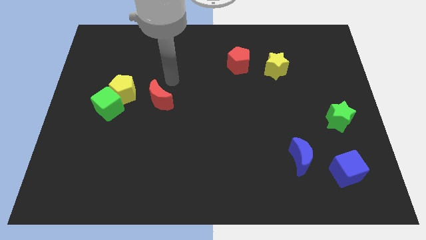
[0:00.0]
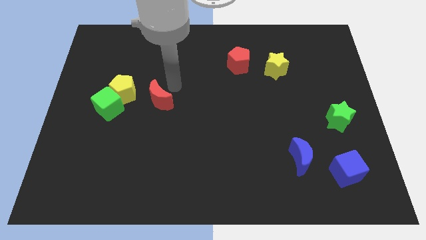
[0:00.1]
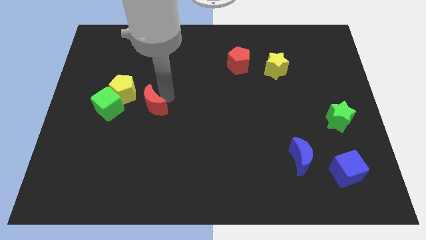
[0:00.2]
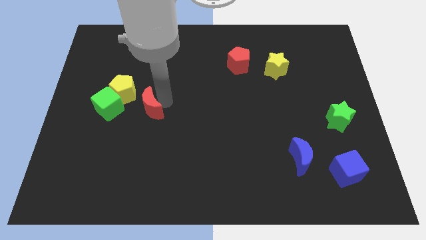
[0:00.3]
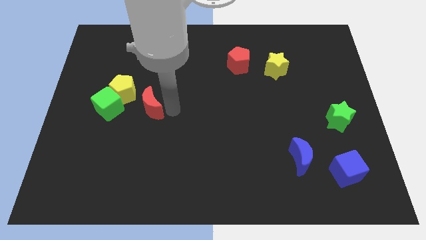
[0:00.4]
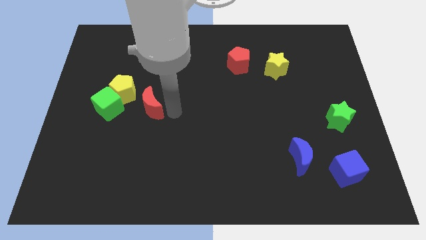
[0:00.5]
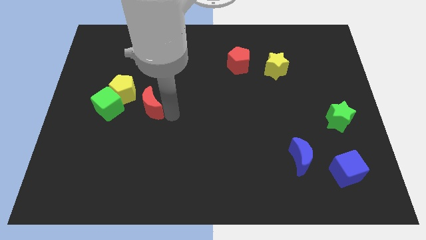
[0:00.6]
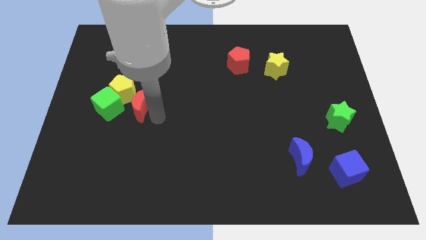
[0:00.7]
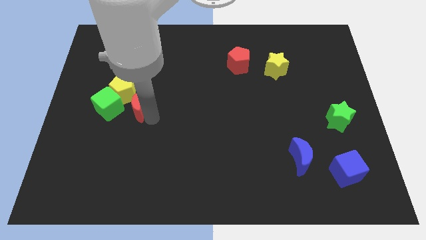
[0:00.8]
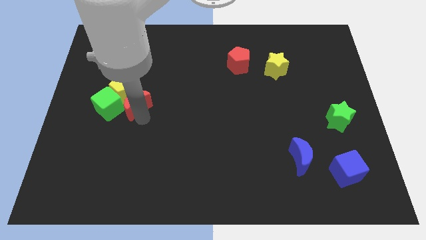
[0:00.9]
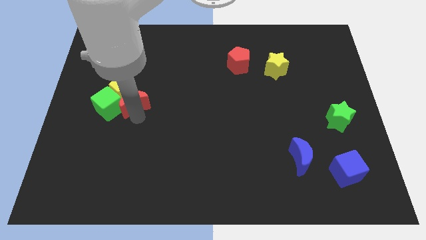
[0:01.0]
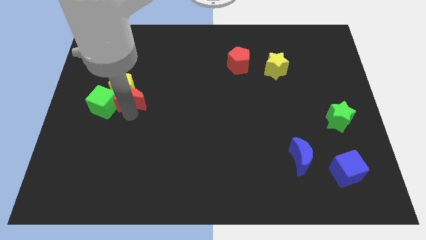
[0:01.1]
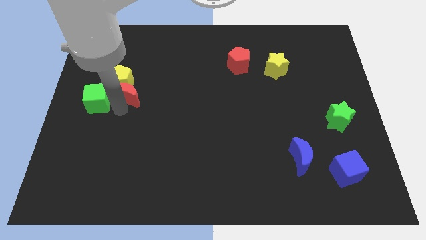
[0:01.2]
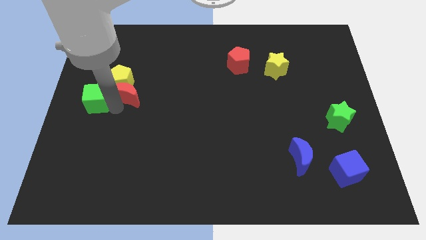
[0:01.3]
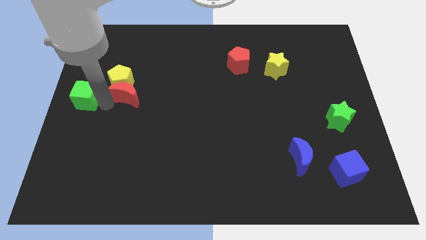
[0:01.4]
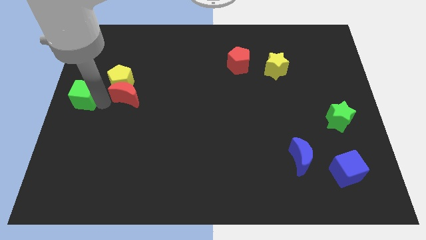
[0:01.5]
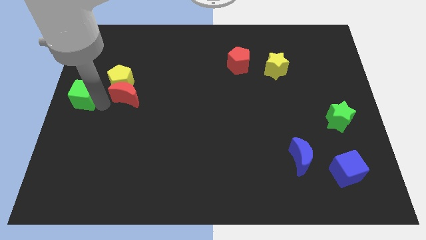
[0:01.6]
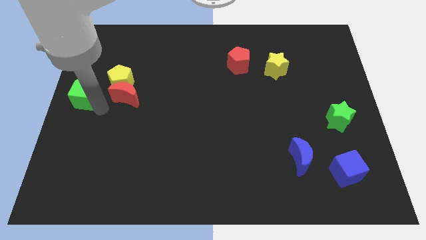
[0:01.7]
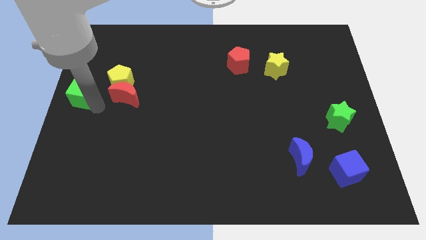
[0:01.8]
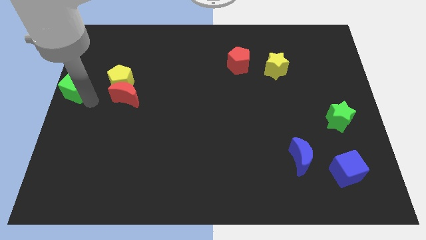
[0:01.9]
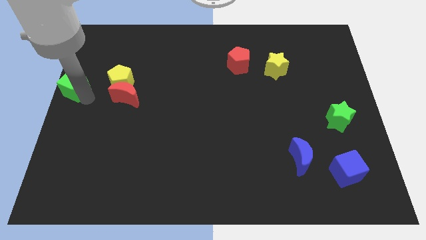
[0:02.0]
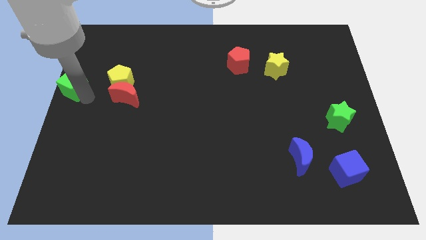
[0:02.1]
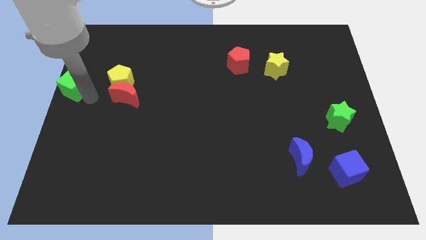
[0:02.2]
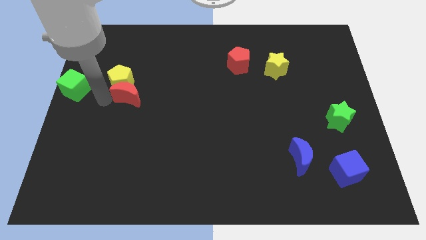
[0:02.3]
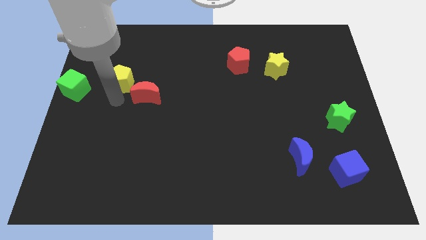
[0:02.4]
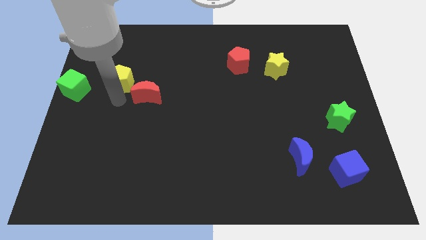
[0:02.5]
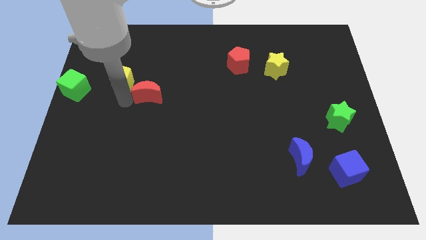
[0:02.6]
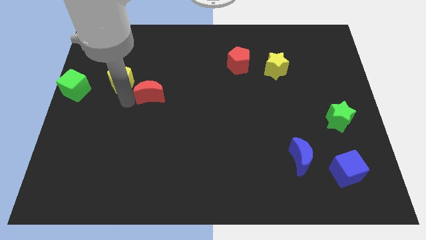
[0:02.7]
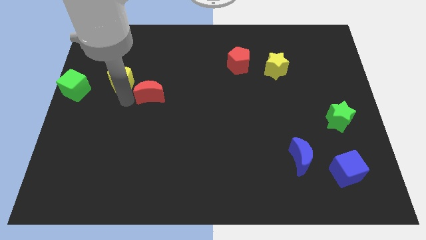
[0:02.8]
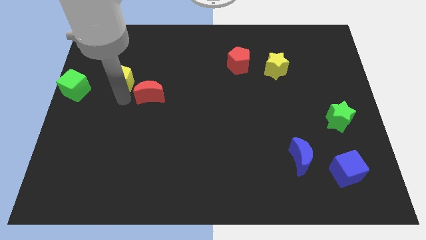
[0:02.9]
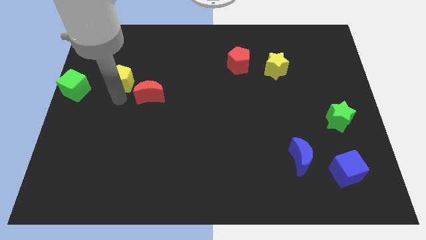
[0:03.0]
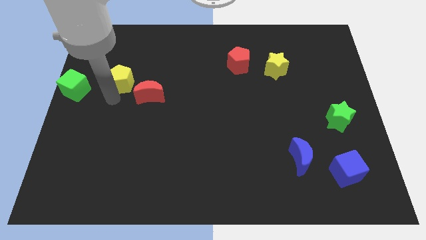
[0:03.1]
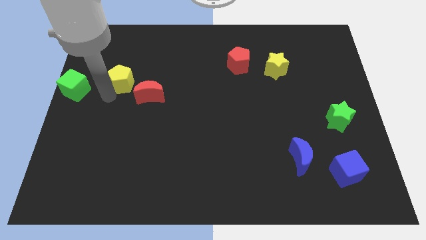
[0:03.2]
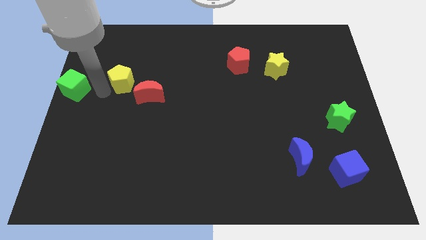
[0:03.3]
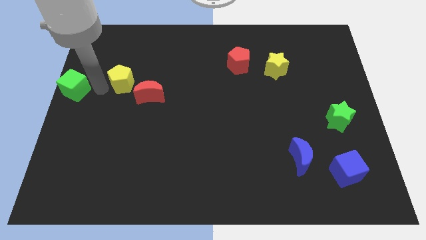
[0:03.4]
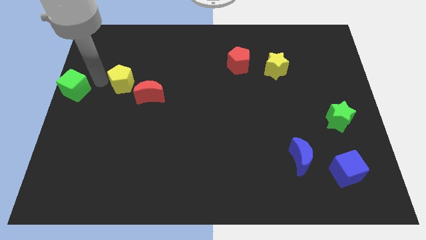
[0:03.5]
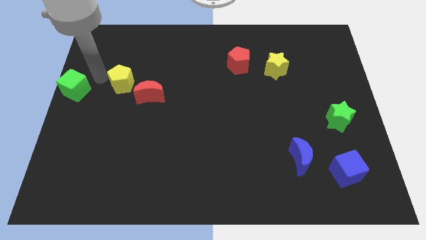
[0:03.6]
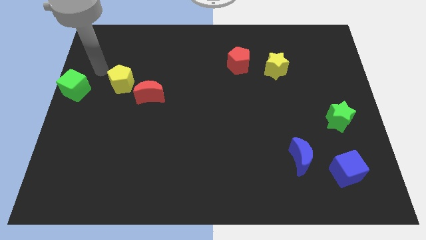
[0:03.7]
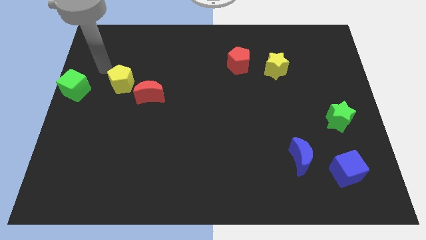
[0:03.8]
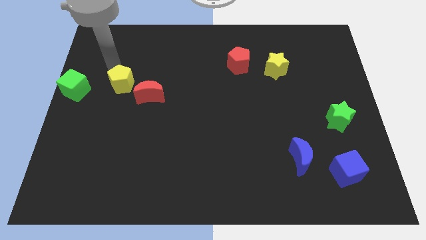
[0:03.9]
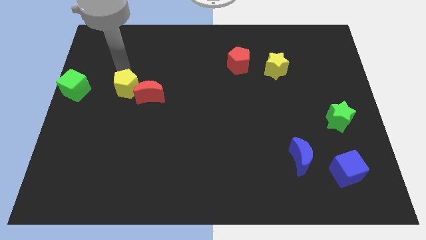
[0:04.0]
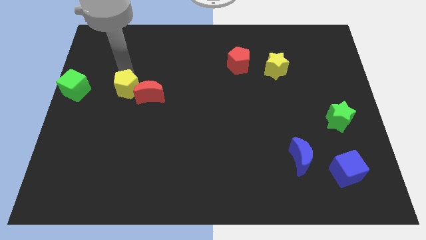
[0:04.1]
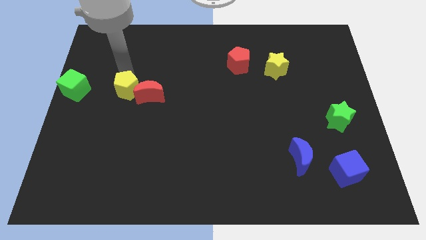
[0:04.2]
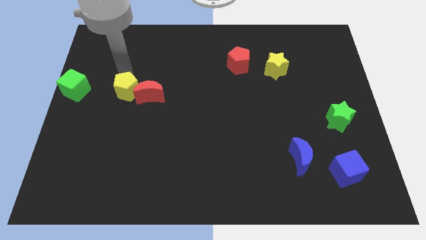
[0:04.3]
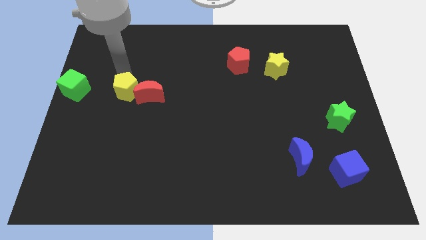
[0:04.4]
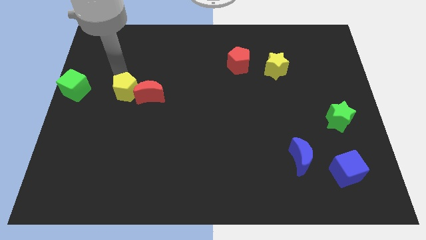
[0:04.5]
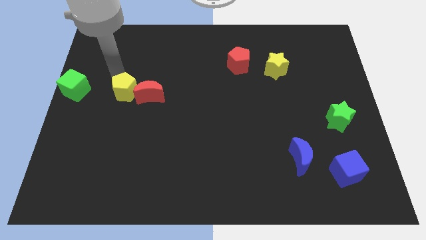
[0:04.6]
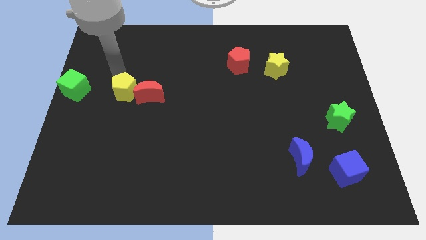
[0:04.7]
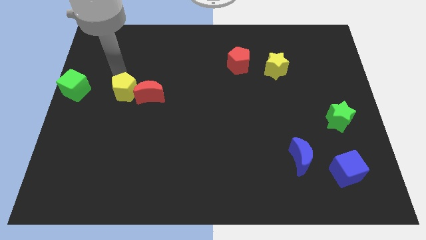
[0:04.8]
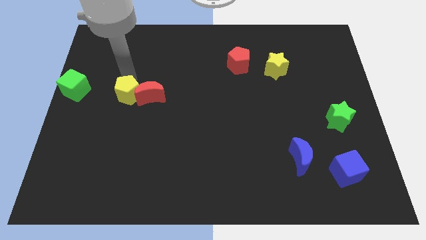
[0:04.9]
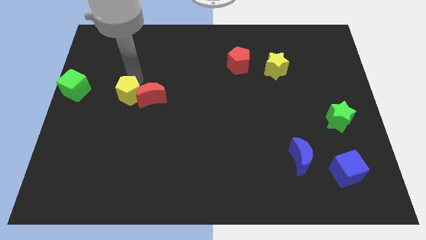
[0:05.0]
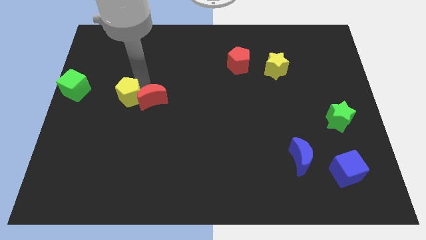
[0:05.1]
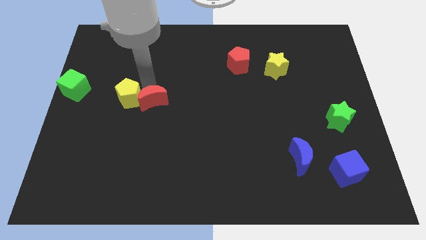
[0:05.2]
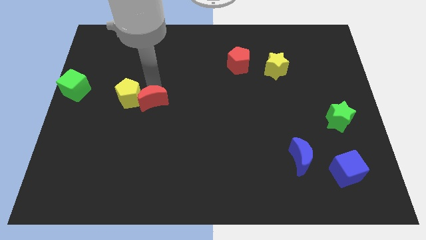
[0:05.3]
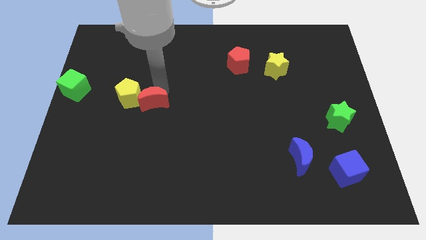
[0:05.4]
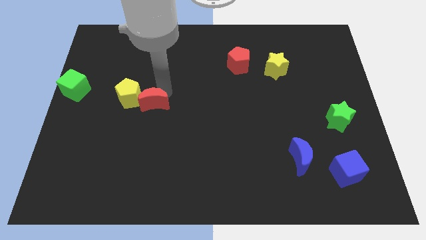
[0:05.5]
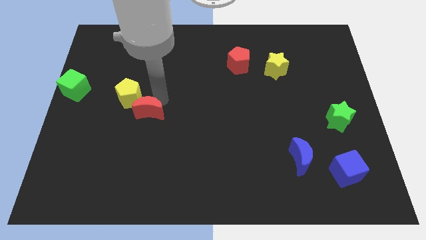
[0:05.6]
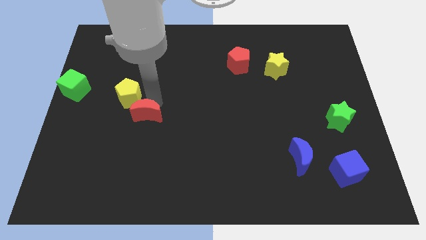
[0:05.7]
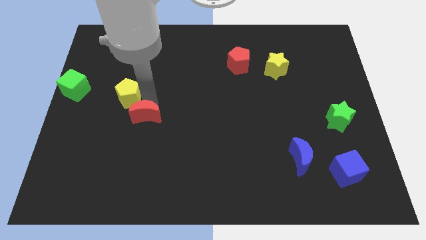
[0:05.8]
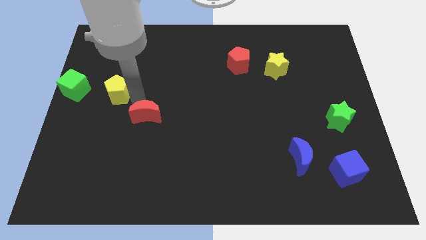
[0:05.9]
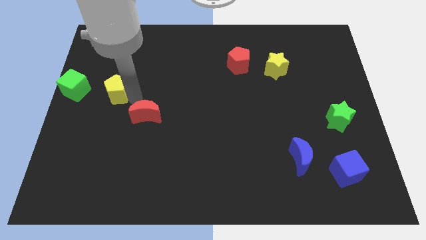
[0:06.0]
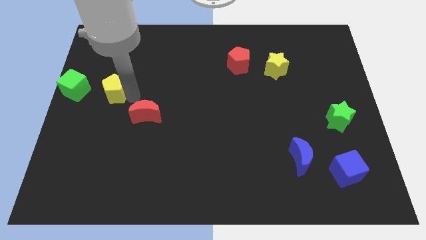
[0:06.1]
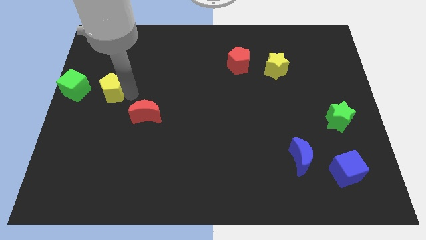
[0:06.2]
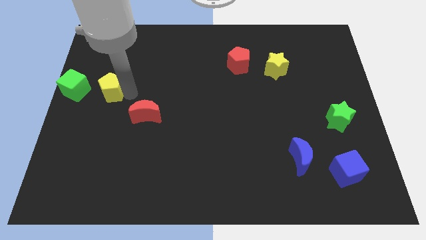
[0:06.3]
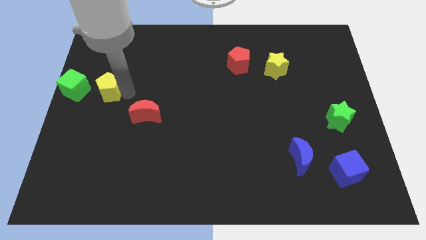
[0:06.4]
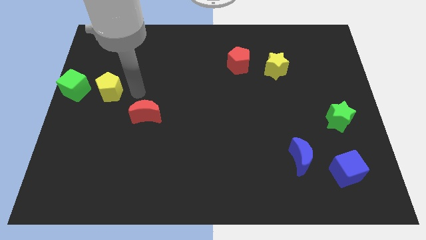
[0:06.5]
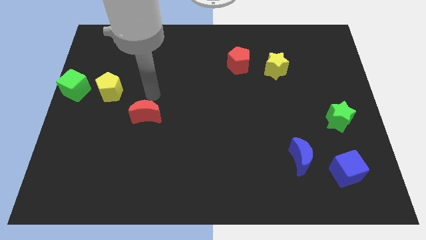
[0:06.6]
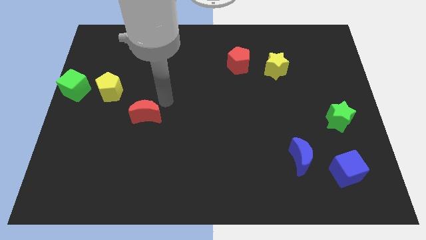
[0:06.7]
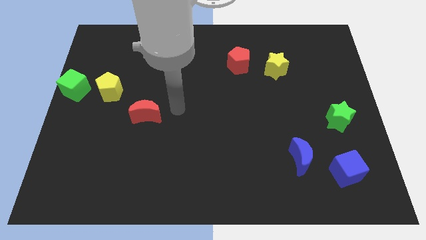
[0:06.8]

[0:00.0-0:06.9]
place the green cube and yellow pentagon in a horizontal line at the left side of the board

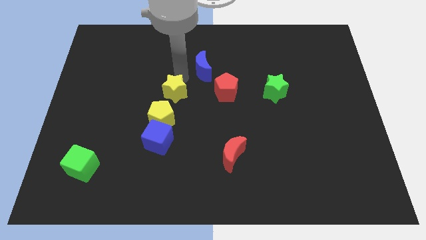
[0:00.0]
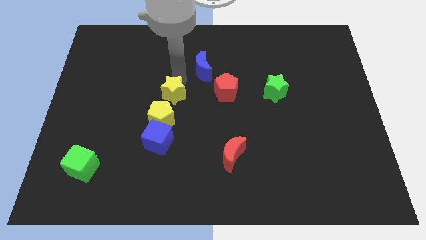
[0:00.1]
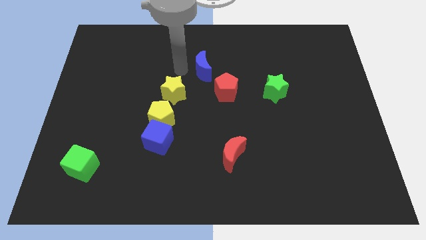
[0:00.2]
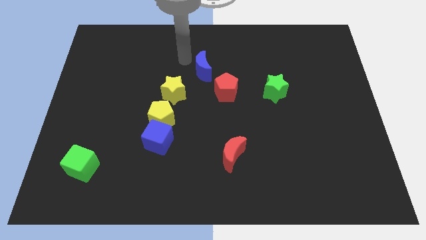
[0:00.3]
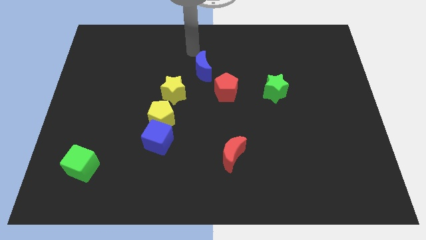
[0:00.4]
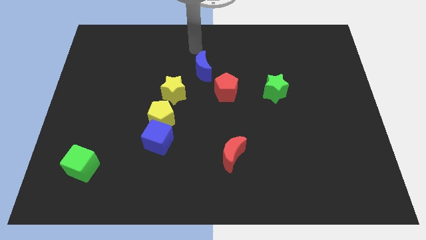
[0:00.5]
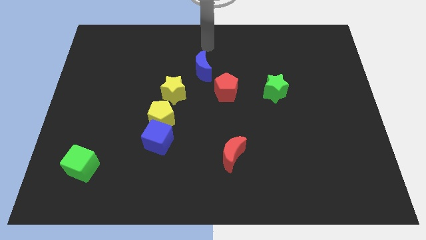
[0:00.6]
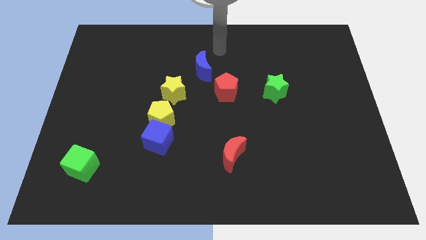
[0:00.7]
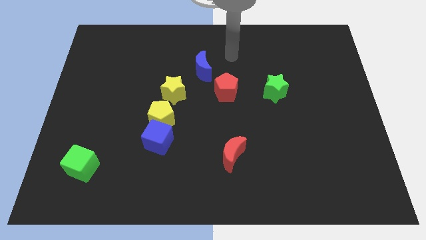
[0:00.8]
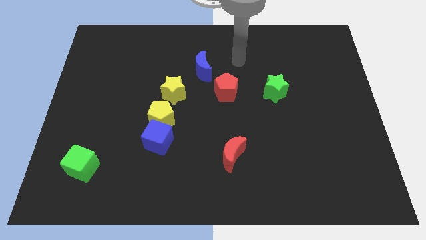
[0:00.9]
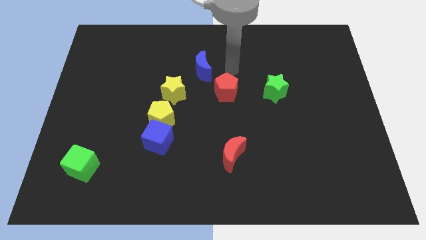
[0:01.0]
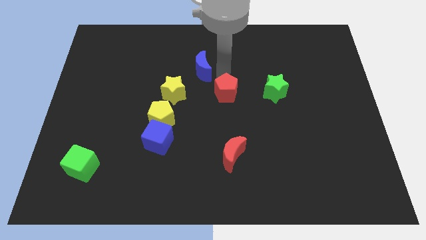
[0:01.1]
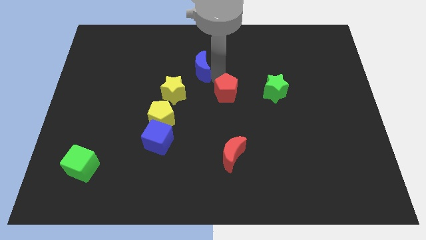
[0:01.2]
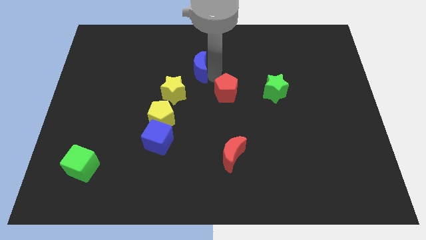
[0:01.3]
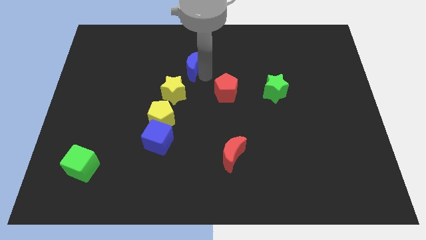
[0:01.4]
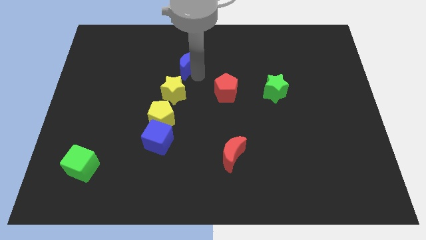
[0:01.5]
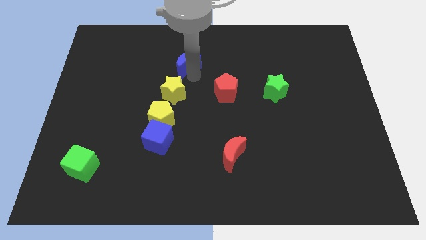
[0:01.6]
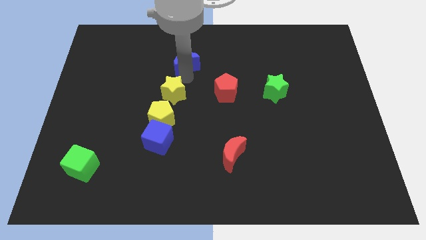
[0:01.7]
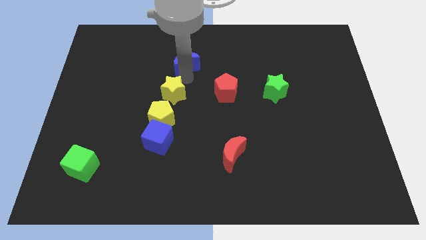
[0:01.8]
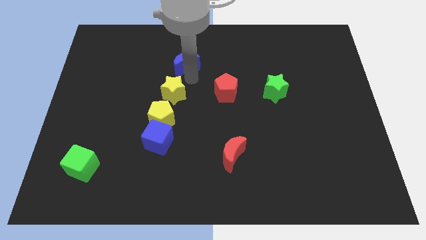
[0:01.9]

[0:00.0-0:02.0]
place the blue moon on top of the yellow star

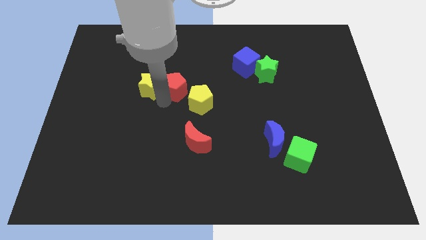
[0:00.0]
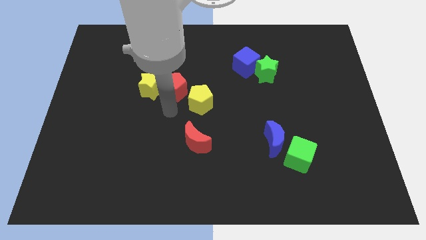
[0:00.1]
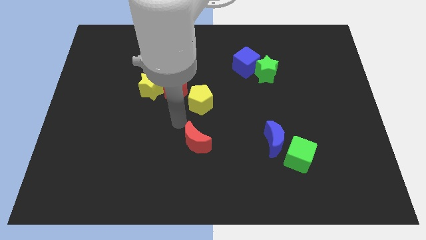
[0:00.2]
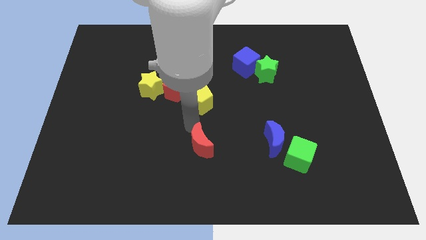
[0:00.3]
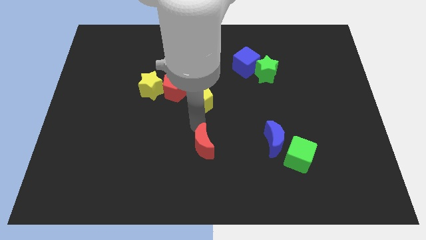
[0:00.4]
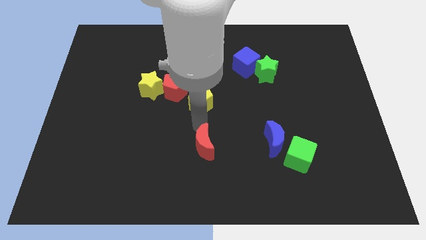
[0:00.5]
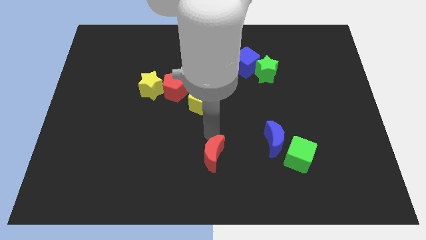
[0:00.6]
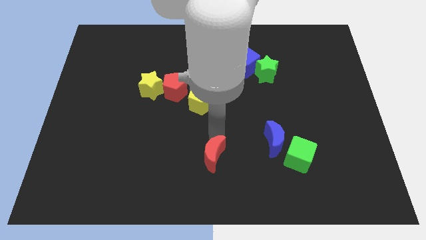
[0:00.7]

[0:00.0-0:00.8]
move the red crescent slightly to the bottom
